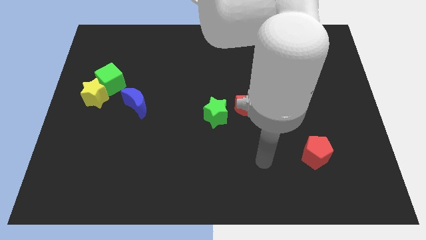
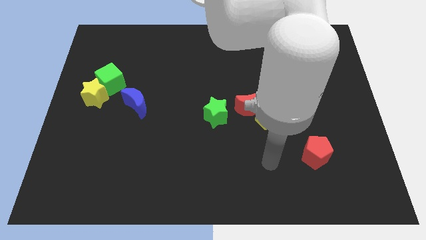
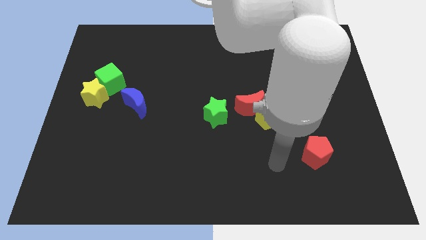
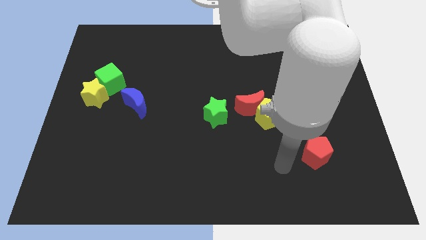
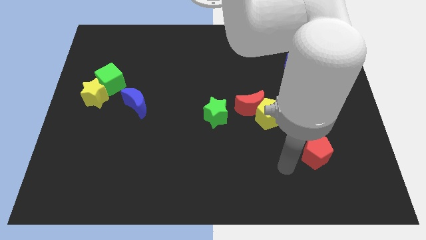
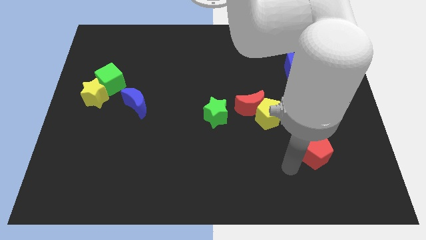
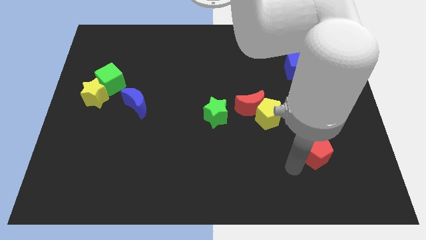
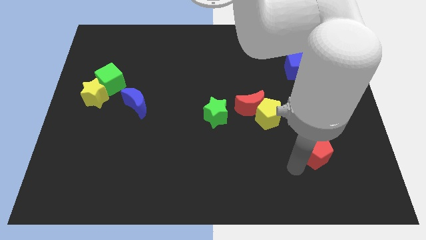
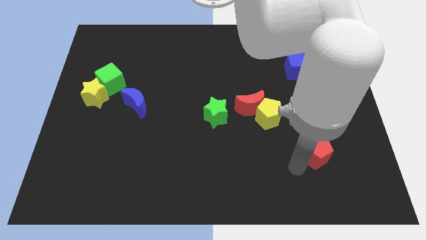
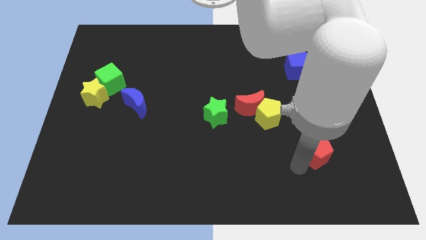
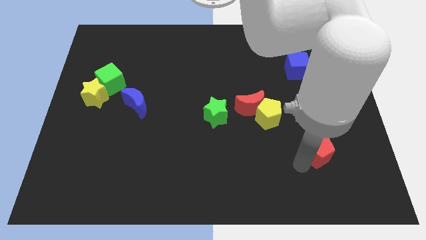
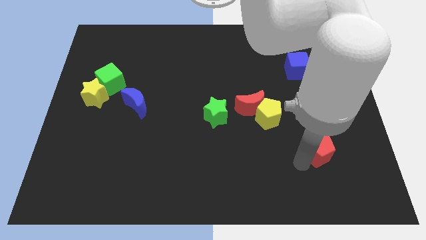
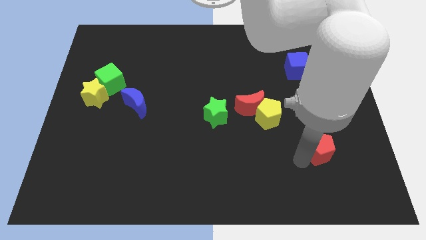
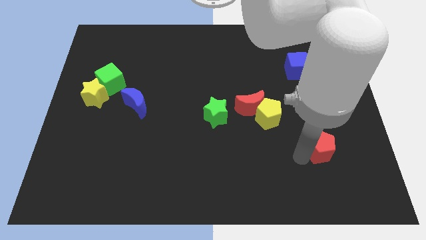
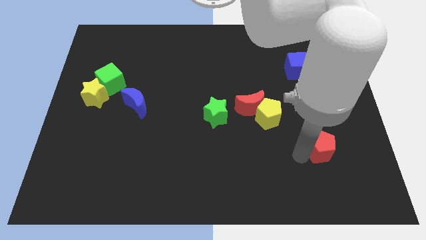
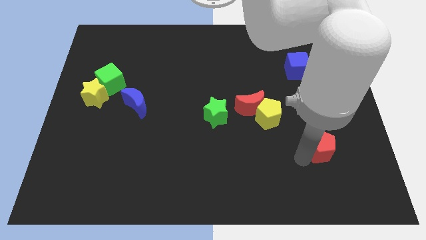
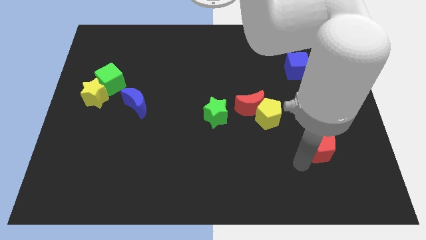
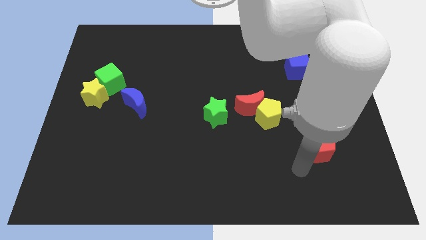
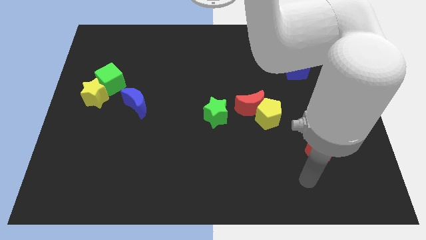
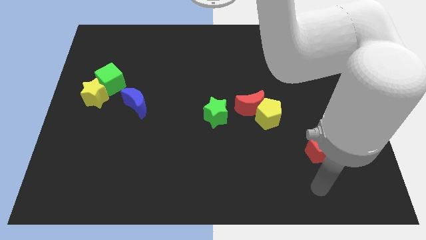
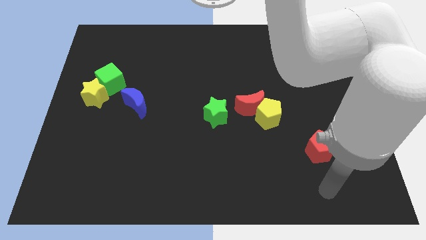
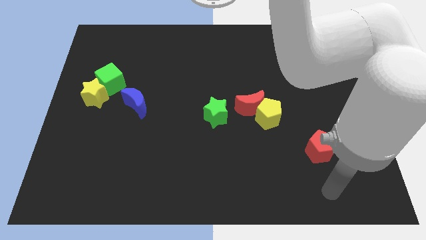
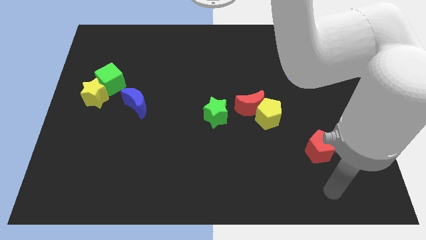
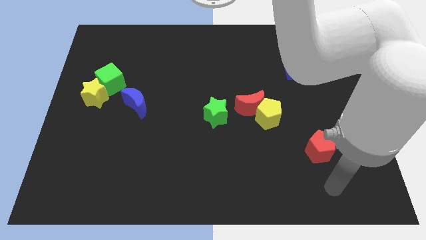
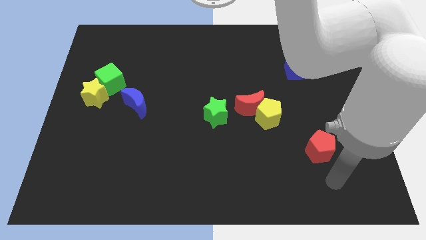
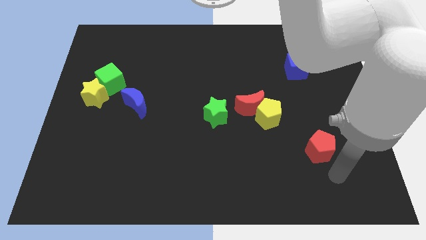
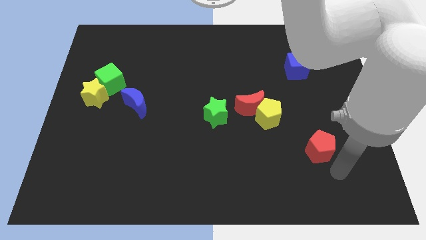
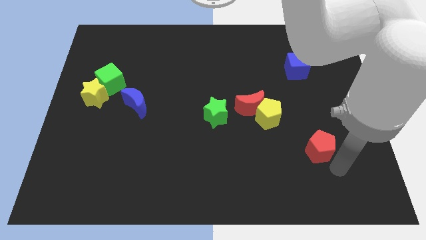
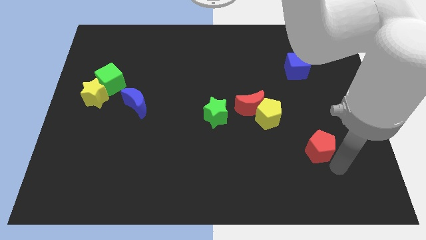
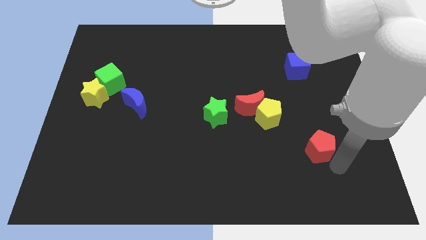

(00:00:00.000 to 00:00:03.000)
move the red moon slightly diagonally to the right of the yellow star

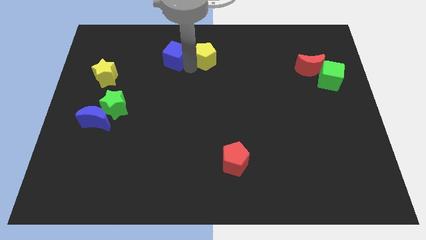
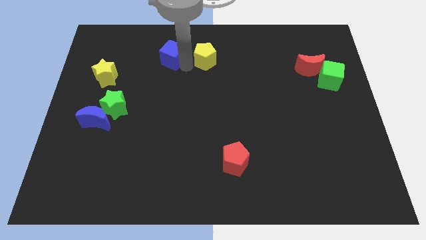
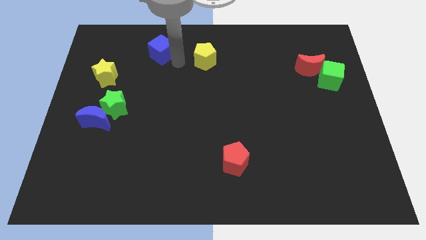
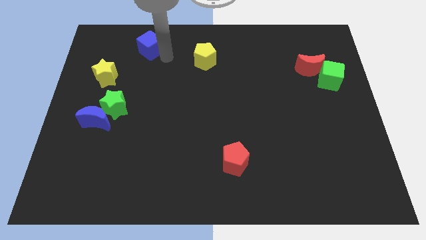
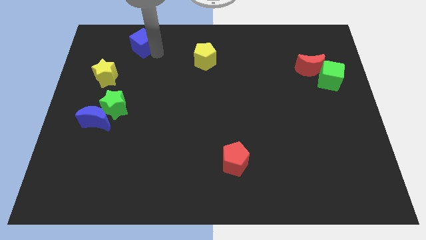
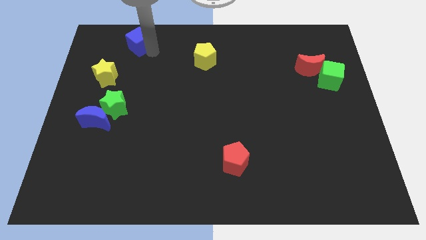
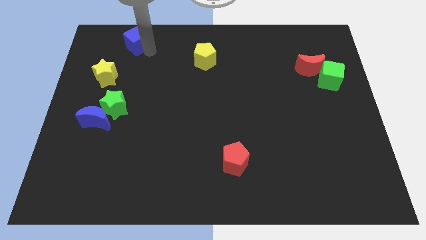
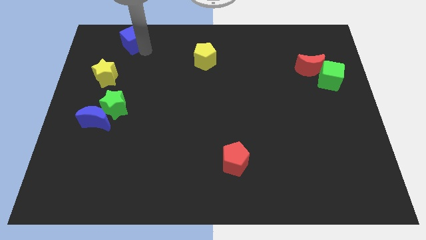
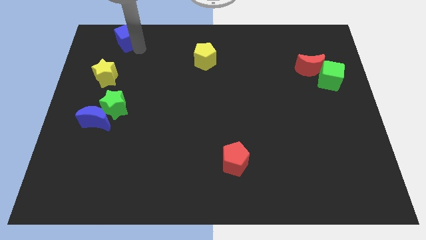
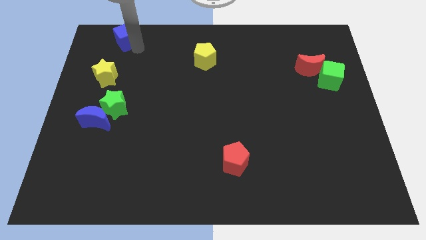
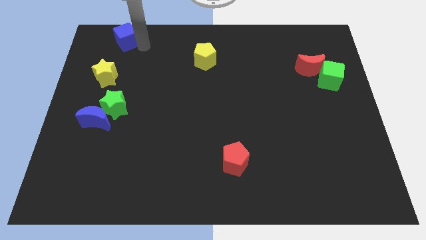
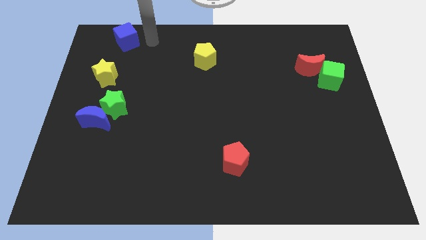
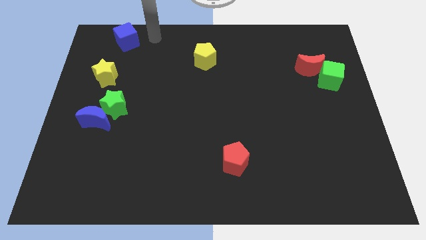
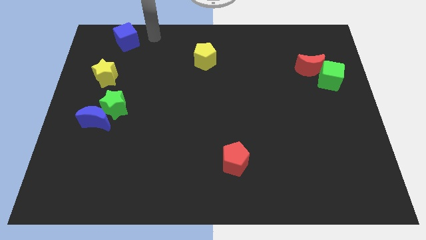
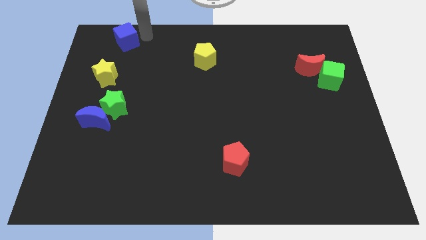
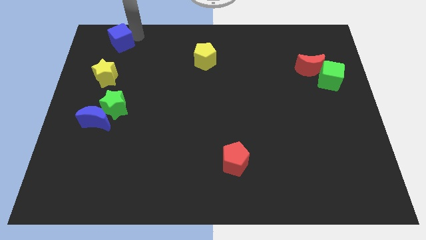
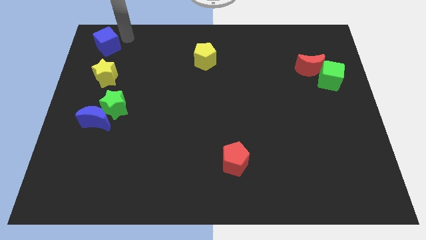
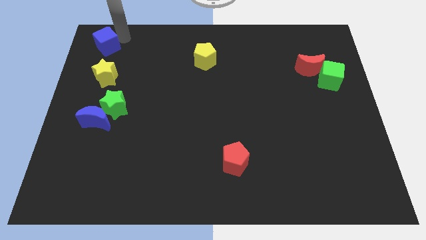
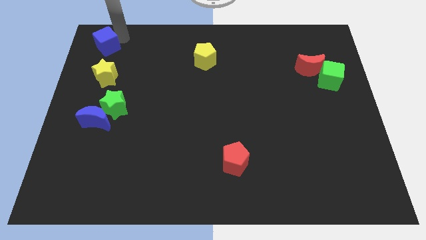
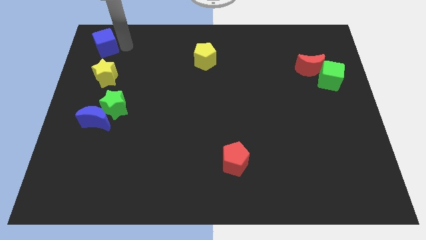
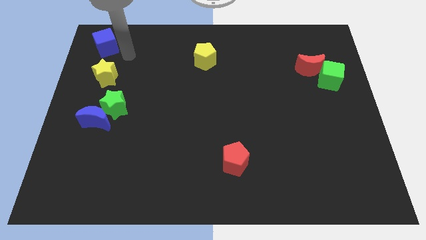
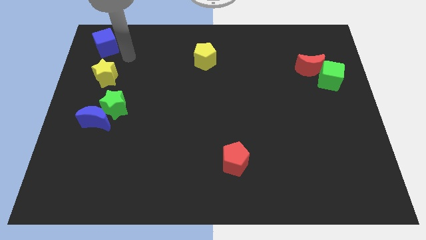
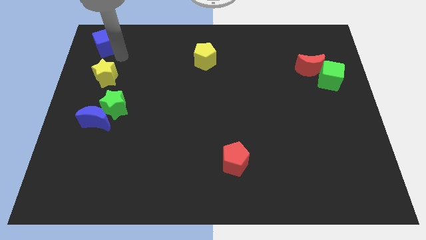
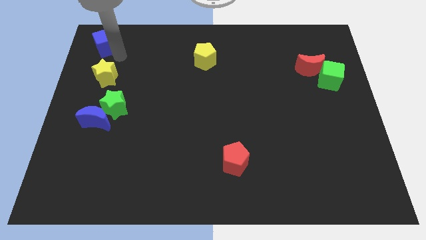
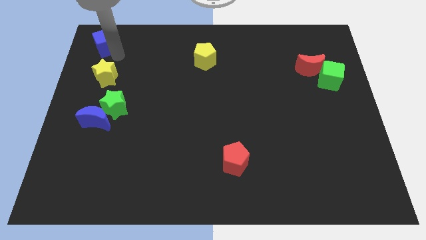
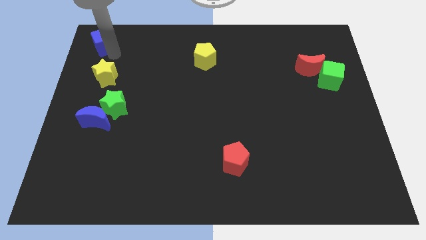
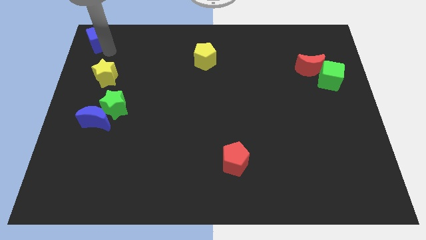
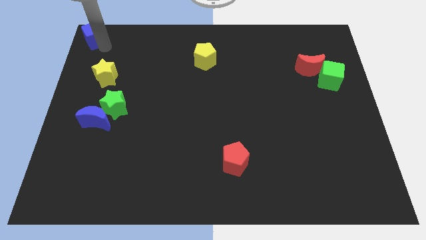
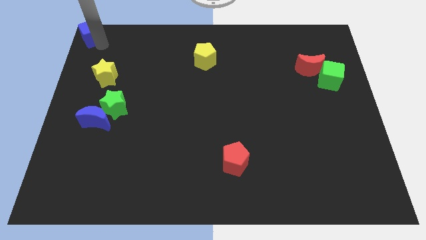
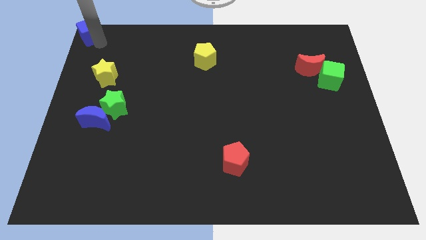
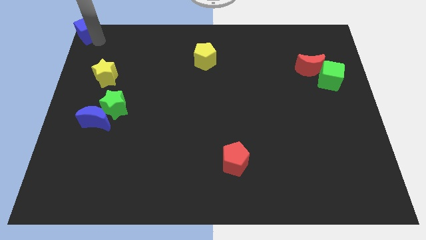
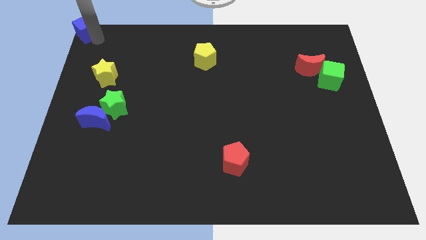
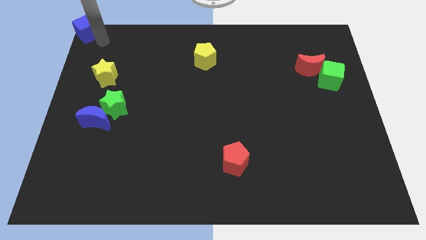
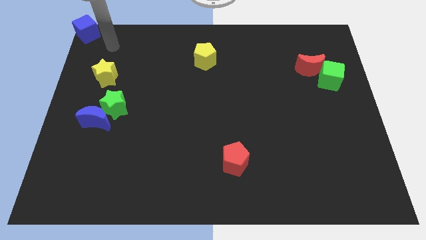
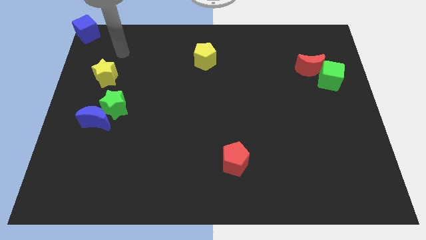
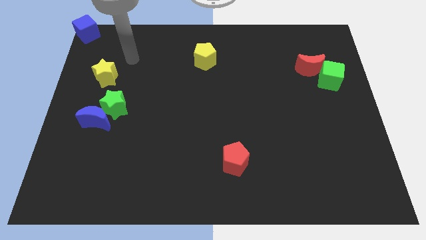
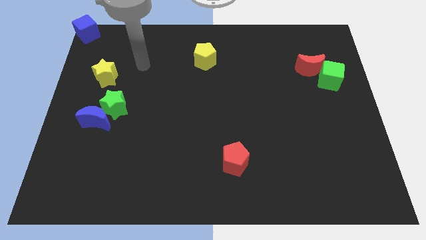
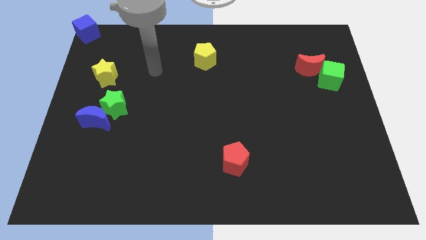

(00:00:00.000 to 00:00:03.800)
put the blue cube to the left corner at top

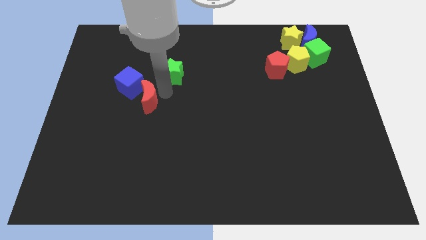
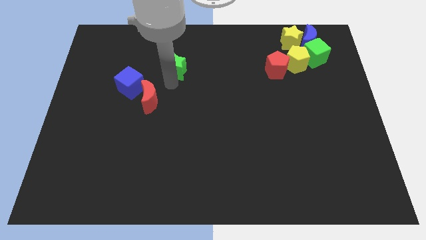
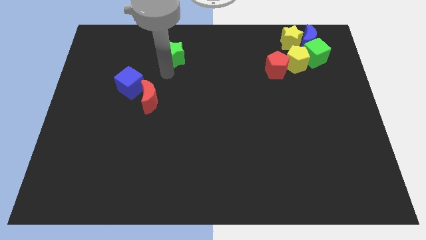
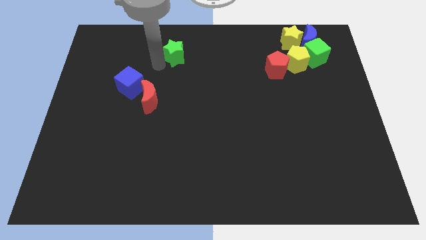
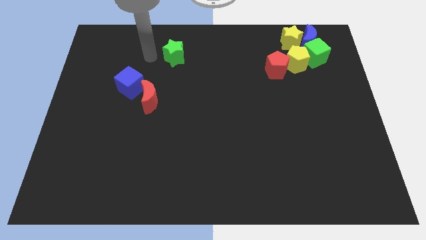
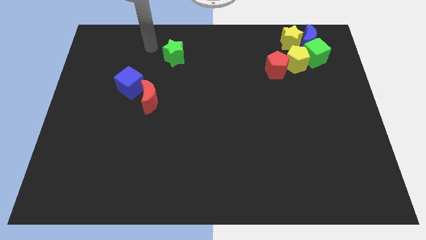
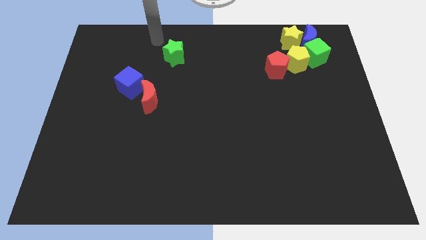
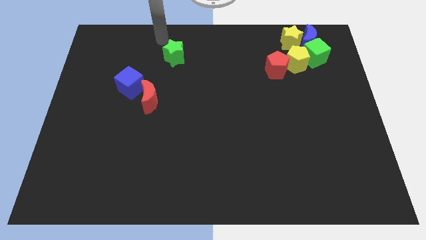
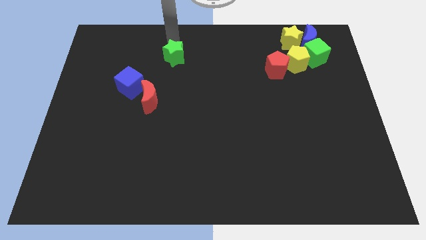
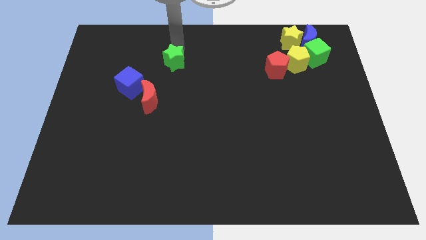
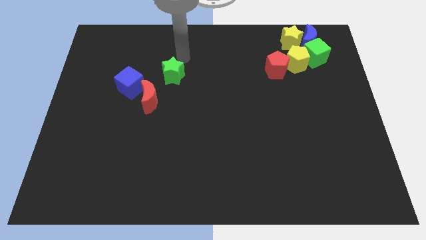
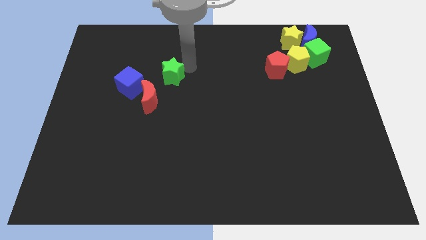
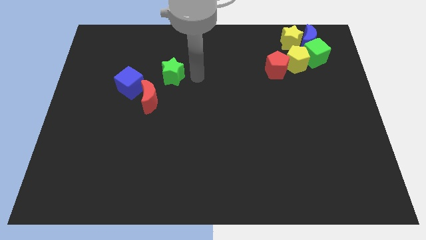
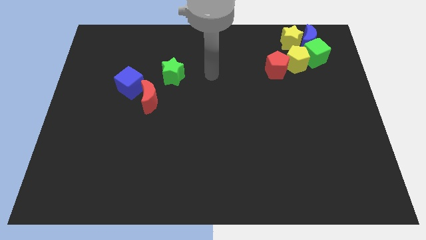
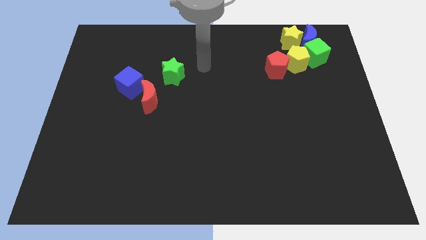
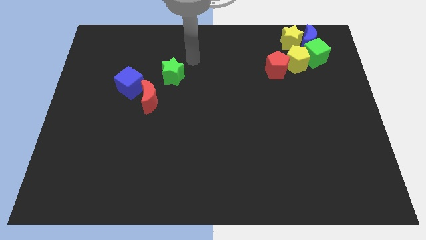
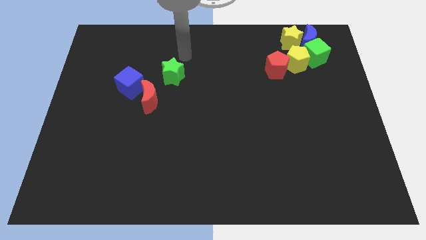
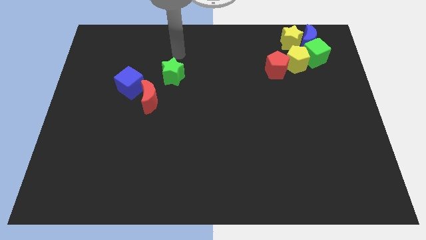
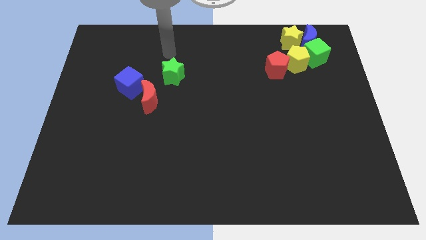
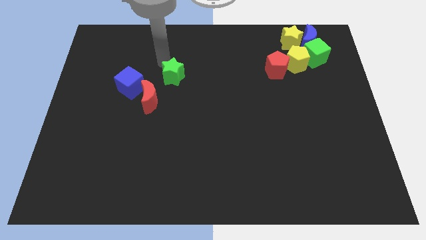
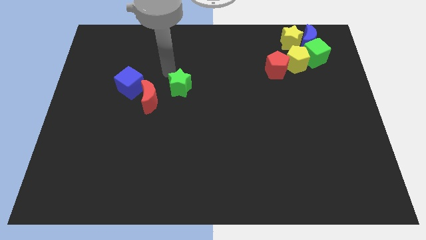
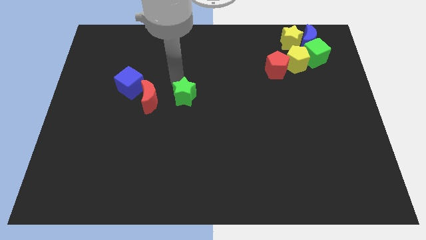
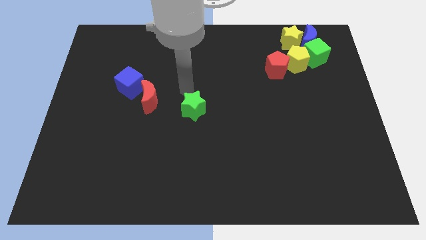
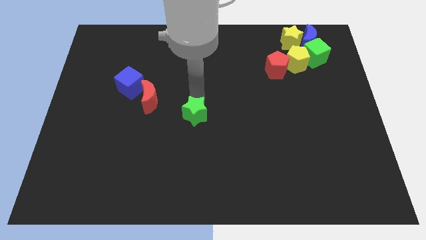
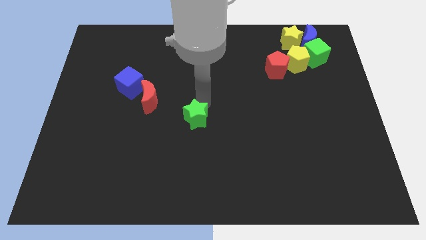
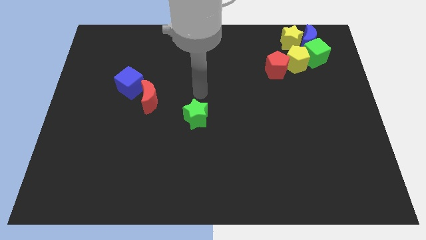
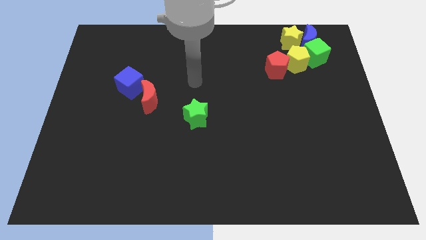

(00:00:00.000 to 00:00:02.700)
move the green star towrds the bottom right of the red crescent
